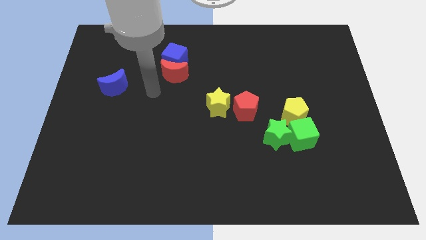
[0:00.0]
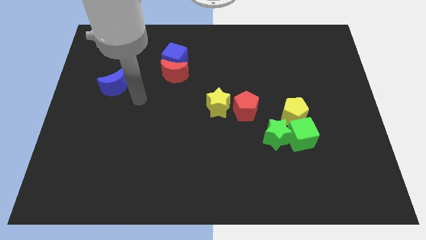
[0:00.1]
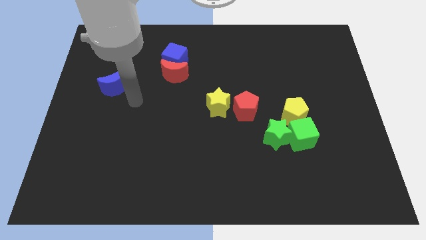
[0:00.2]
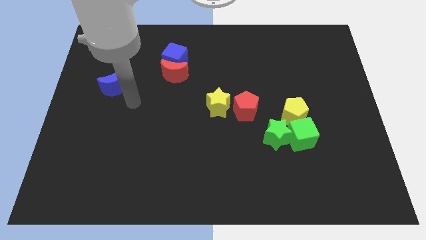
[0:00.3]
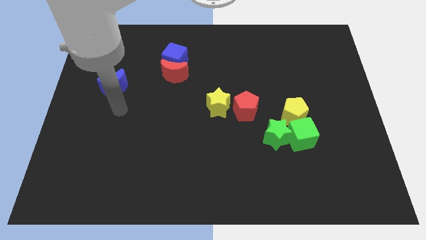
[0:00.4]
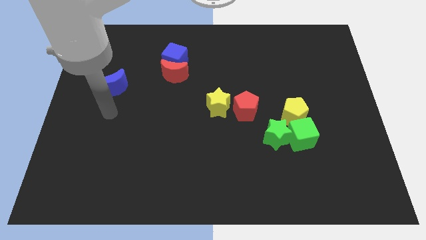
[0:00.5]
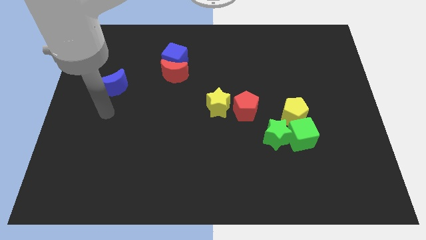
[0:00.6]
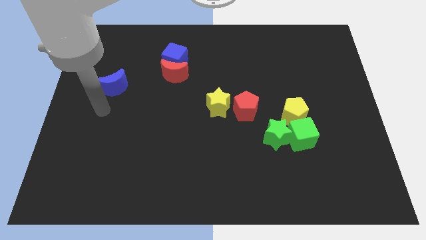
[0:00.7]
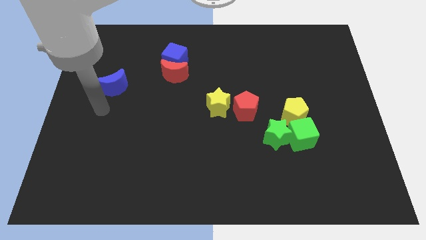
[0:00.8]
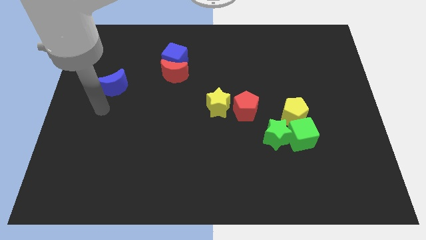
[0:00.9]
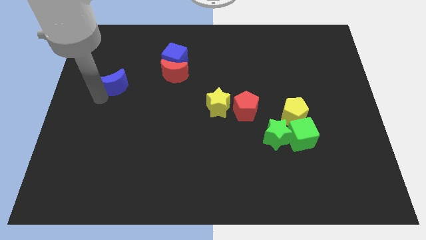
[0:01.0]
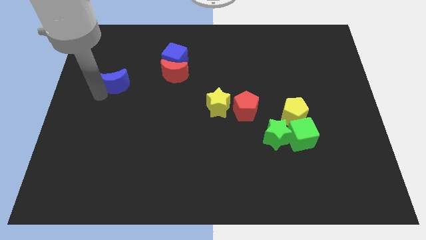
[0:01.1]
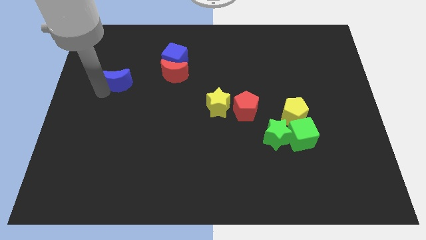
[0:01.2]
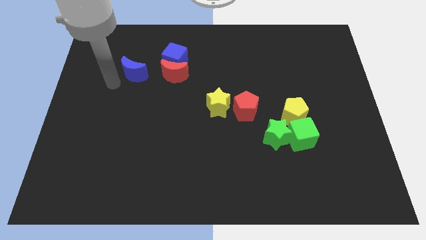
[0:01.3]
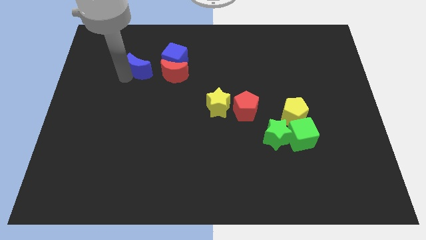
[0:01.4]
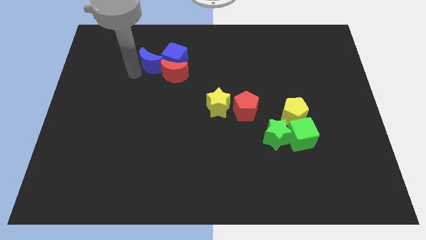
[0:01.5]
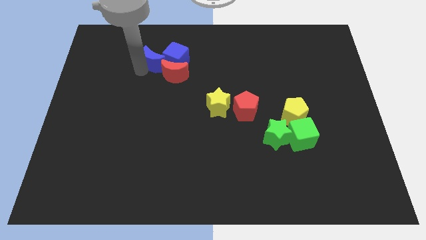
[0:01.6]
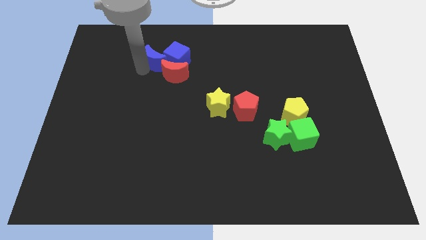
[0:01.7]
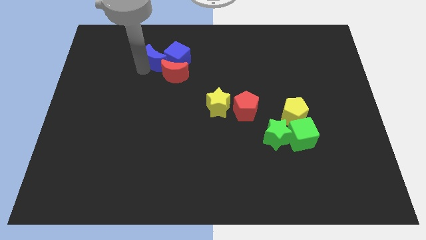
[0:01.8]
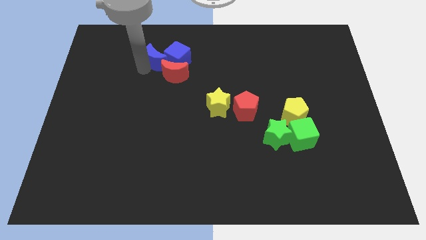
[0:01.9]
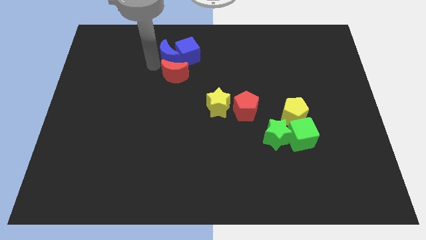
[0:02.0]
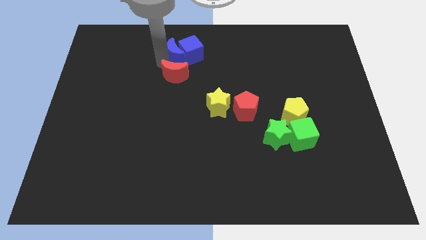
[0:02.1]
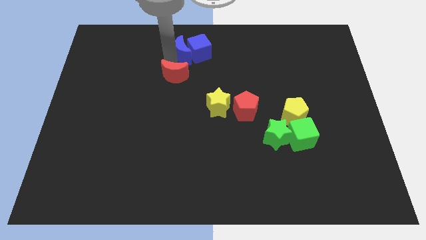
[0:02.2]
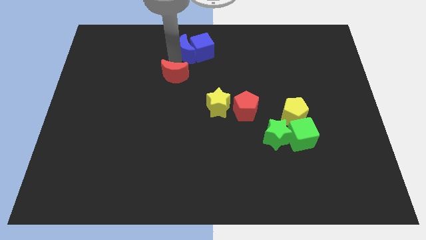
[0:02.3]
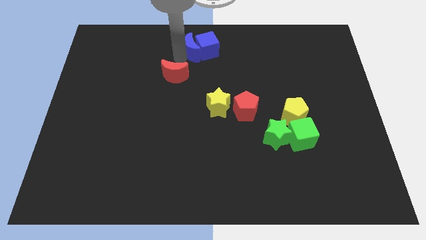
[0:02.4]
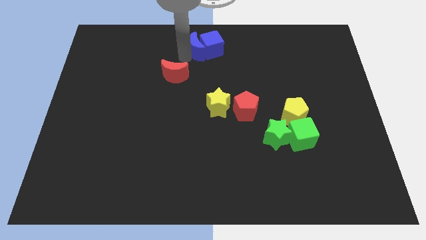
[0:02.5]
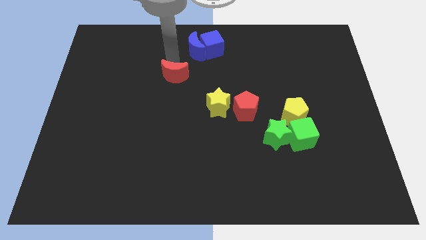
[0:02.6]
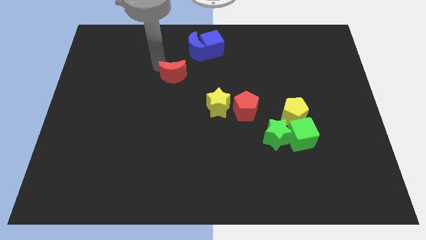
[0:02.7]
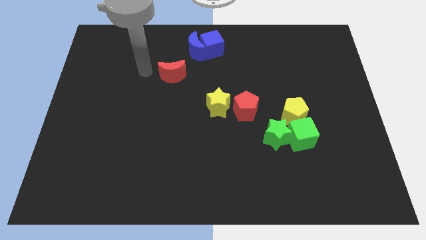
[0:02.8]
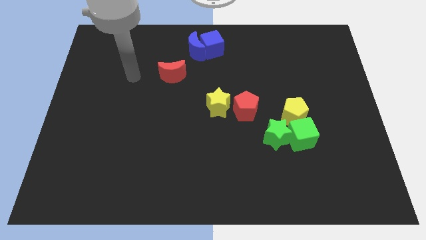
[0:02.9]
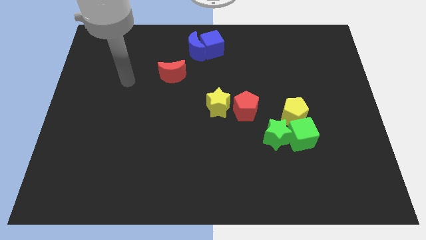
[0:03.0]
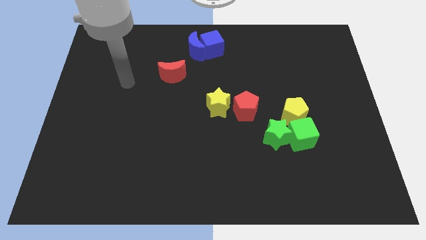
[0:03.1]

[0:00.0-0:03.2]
move the blue moon and blue cube to the top center of the board

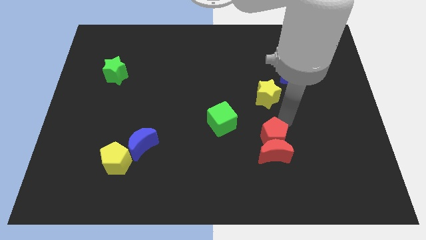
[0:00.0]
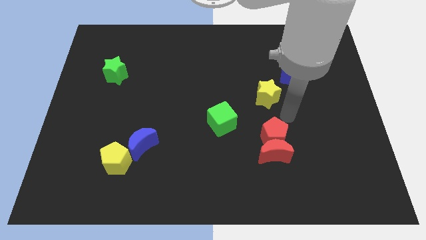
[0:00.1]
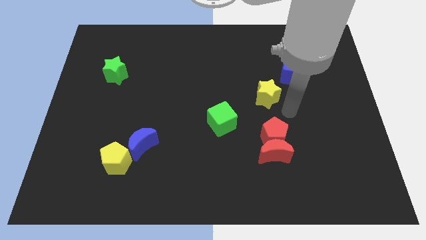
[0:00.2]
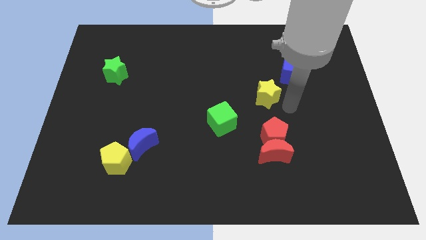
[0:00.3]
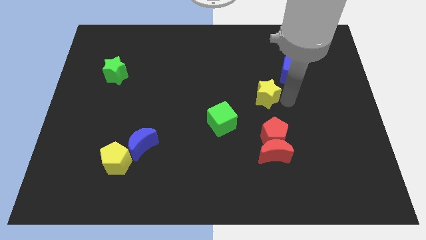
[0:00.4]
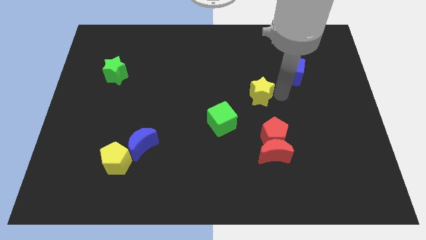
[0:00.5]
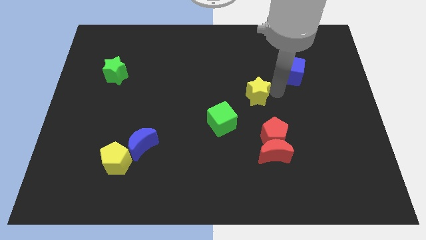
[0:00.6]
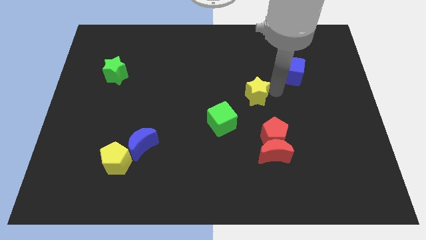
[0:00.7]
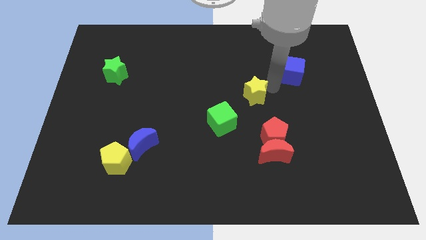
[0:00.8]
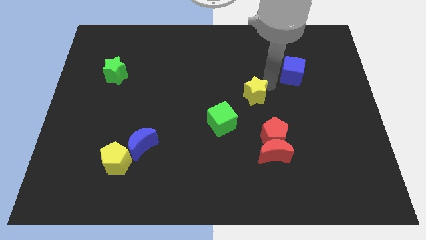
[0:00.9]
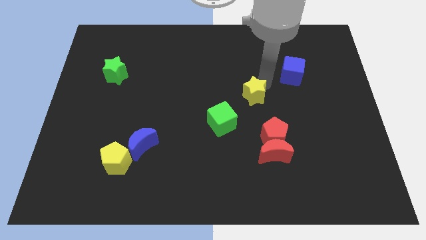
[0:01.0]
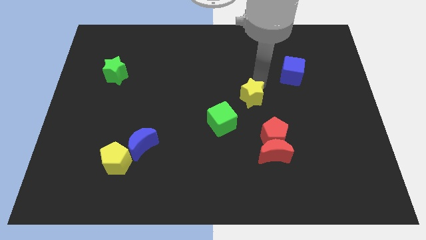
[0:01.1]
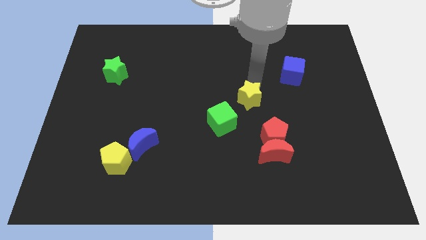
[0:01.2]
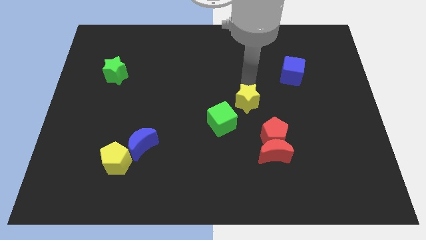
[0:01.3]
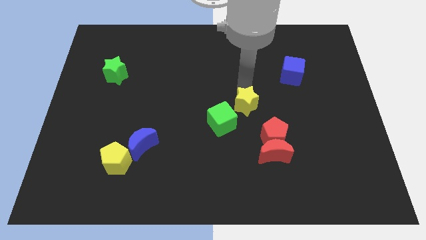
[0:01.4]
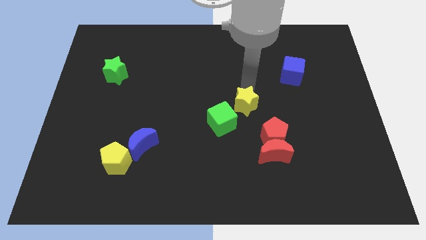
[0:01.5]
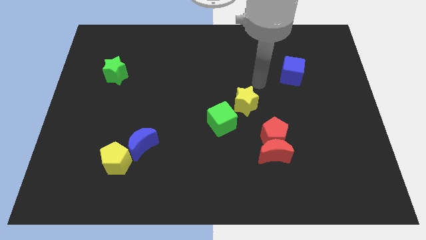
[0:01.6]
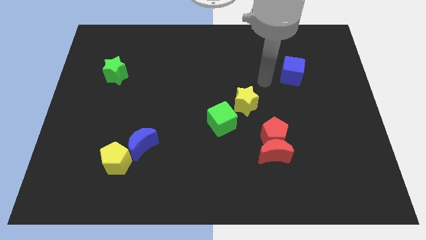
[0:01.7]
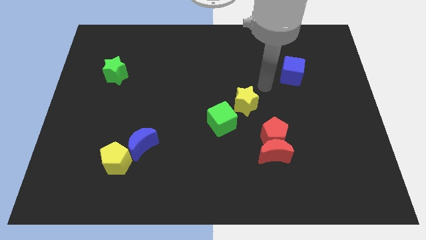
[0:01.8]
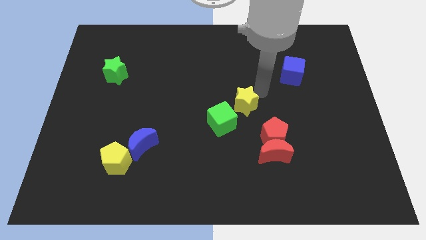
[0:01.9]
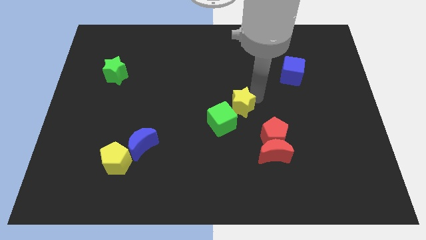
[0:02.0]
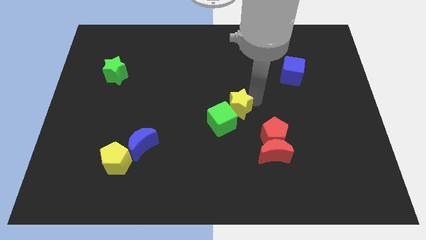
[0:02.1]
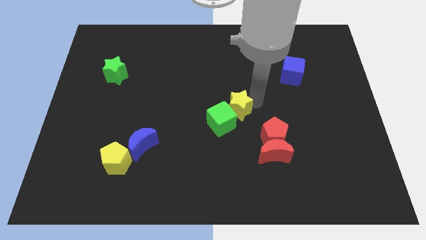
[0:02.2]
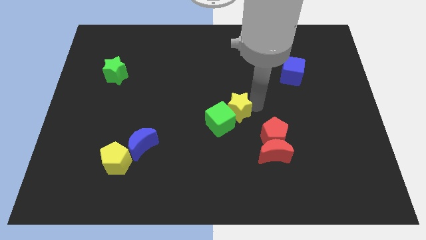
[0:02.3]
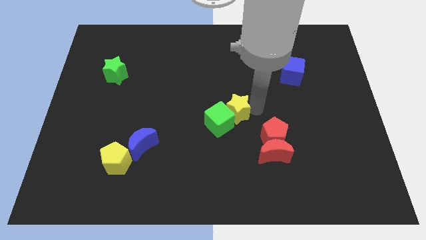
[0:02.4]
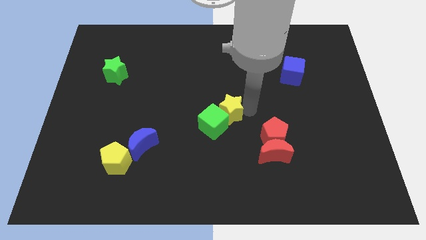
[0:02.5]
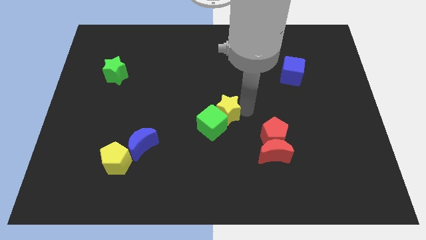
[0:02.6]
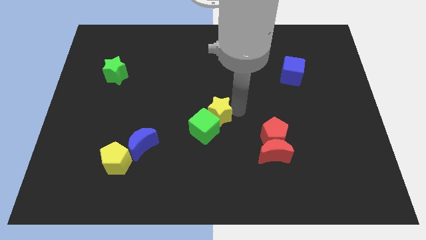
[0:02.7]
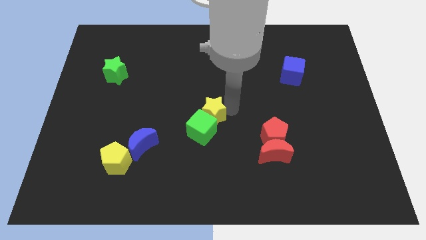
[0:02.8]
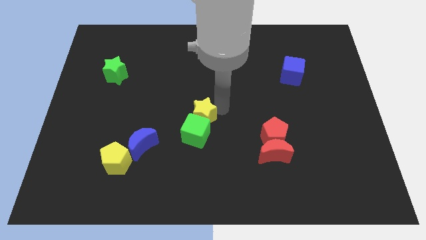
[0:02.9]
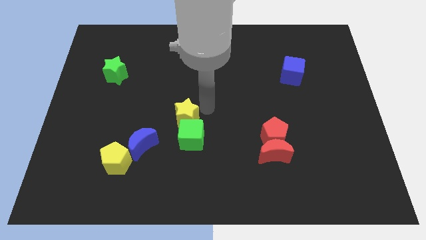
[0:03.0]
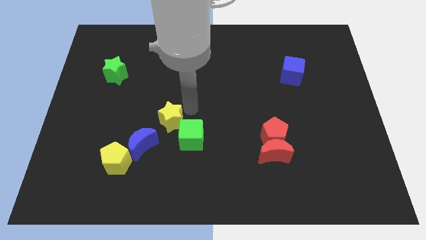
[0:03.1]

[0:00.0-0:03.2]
move the green cube with the yellow star

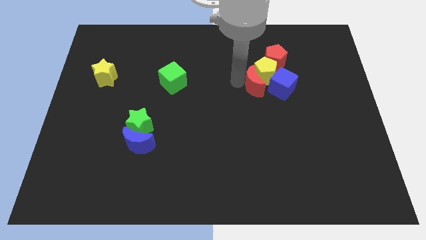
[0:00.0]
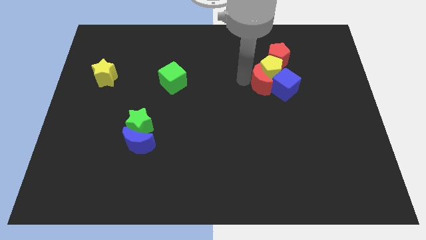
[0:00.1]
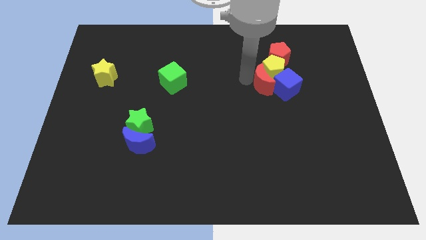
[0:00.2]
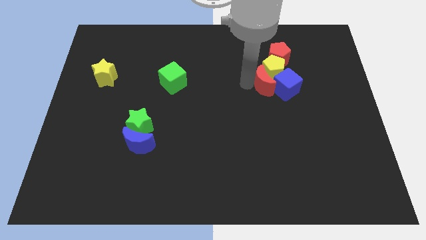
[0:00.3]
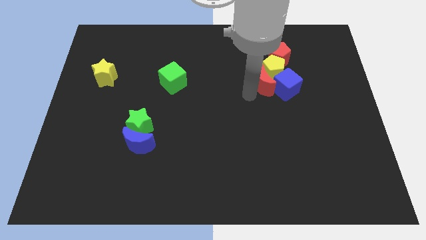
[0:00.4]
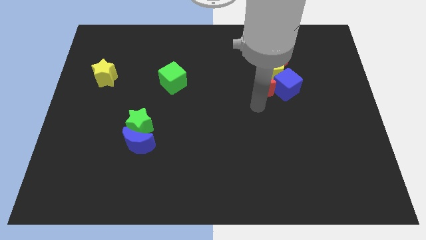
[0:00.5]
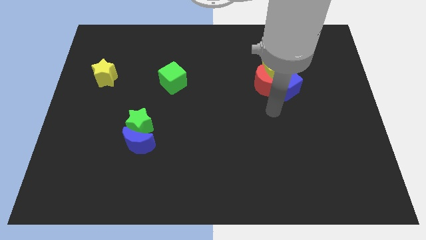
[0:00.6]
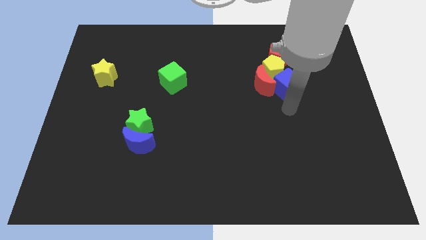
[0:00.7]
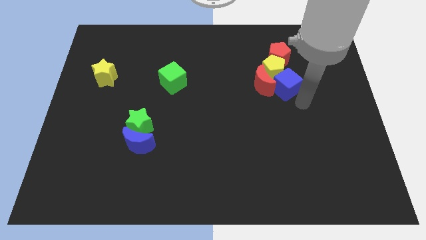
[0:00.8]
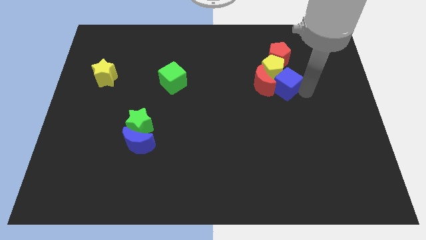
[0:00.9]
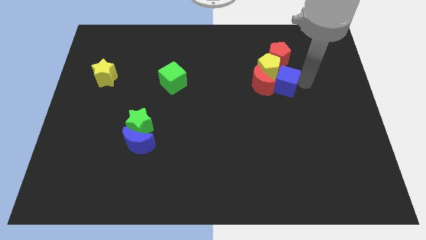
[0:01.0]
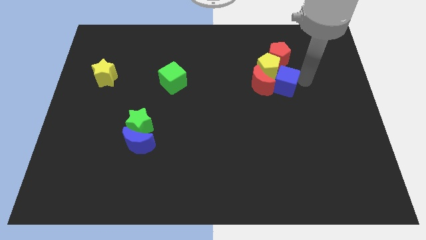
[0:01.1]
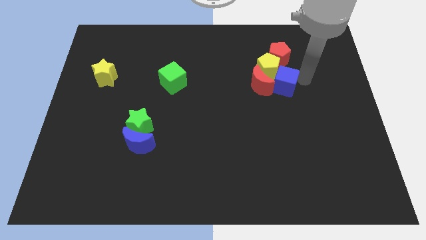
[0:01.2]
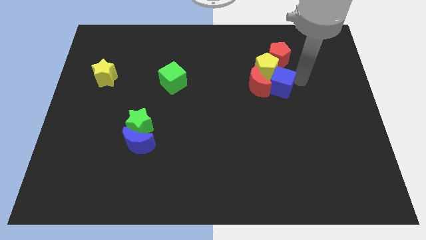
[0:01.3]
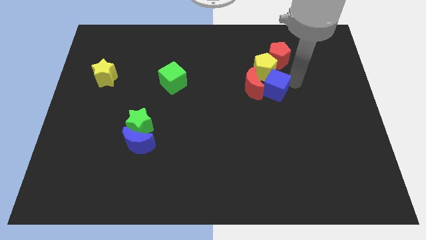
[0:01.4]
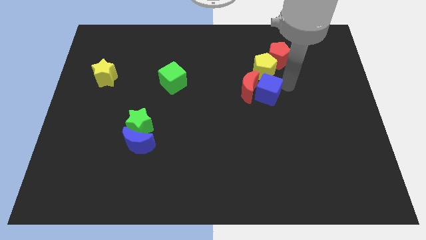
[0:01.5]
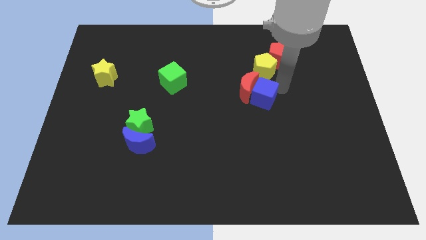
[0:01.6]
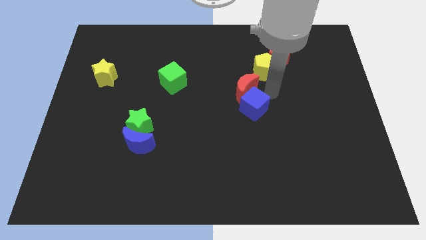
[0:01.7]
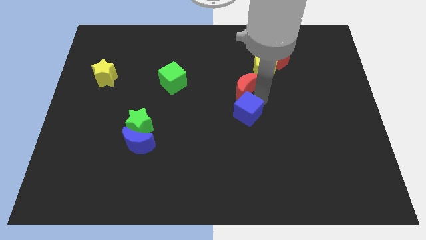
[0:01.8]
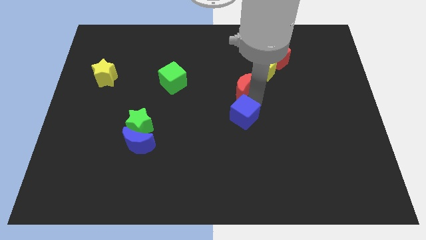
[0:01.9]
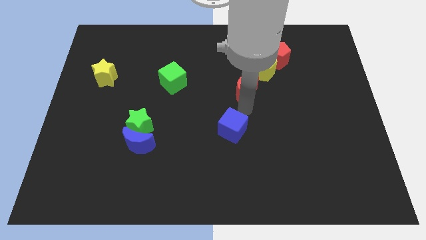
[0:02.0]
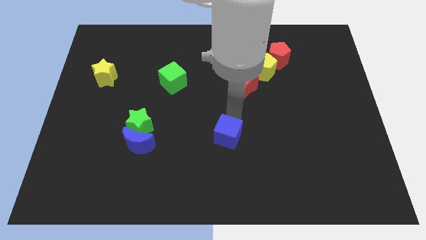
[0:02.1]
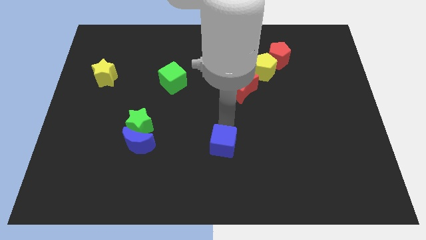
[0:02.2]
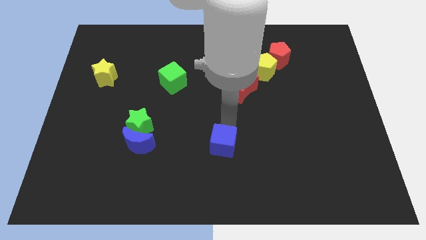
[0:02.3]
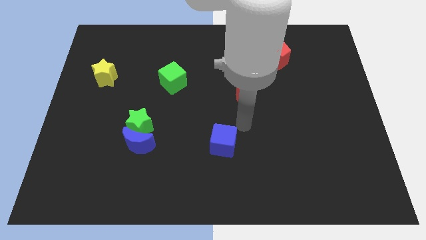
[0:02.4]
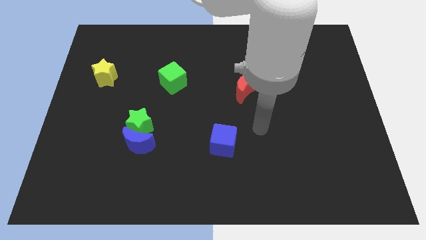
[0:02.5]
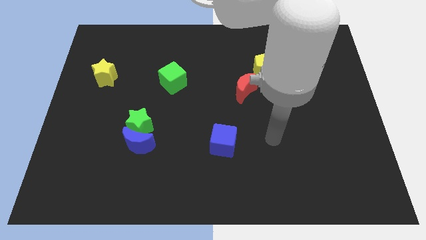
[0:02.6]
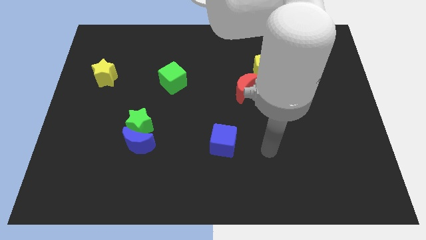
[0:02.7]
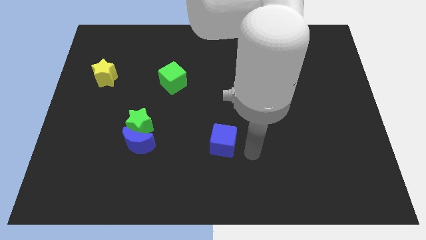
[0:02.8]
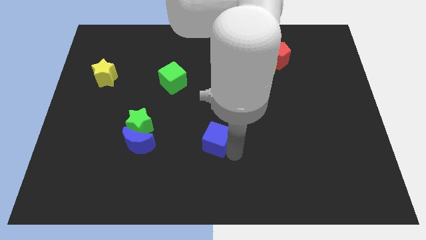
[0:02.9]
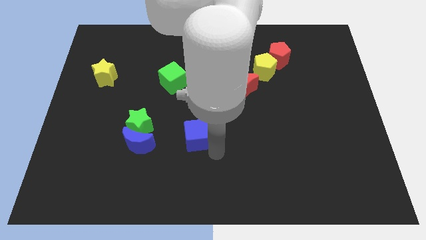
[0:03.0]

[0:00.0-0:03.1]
place the blue cube parallel right to the blue moon
